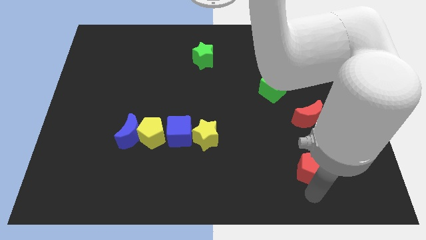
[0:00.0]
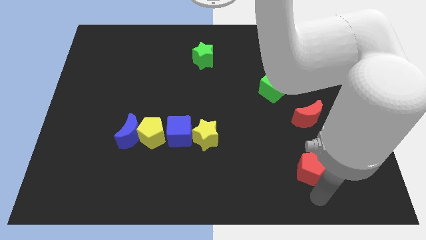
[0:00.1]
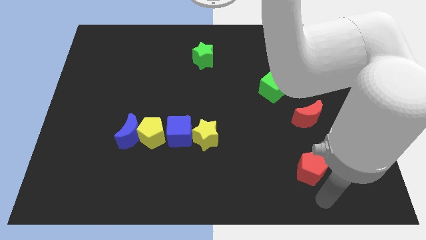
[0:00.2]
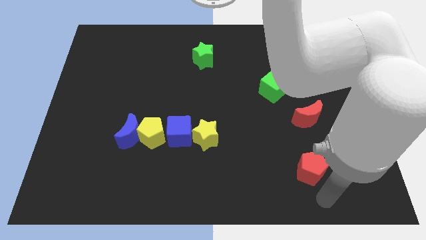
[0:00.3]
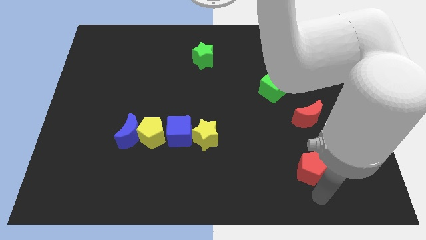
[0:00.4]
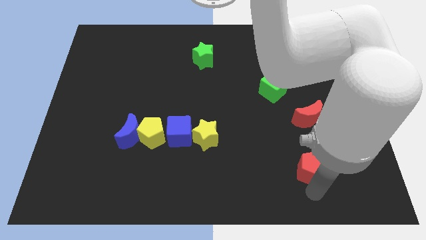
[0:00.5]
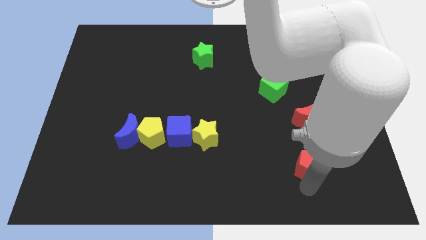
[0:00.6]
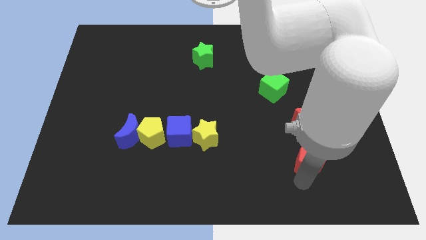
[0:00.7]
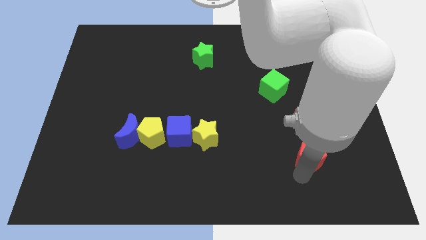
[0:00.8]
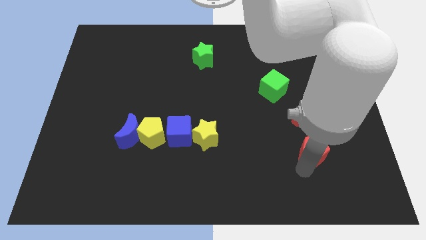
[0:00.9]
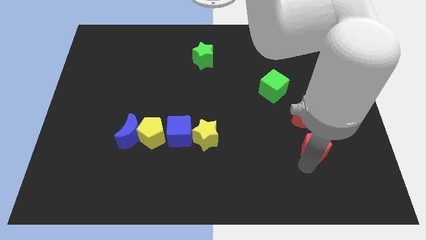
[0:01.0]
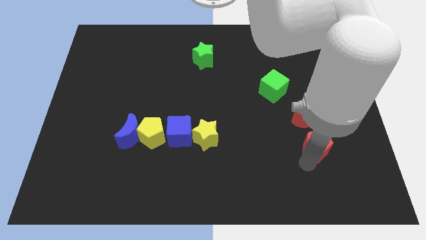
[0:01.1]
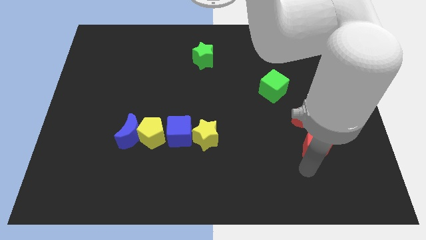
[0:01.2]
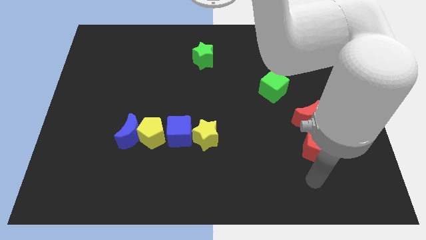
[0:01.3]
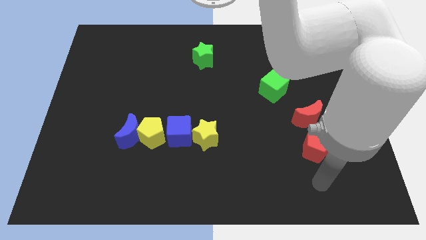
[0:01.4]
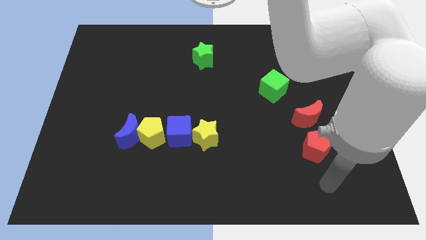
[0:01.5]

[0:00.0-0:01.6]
push the red pentagon vertically at the bottom of the red crescent

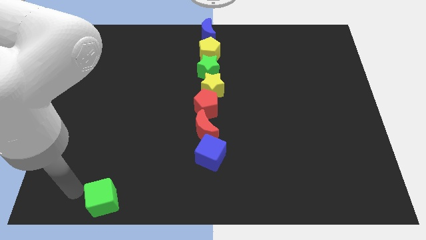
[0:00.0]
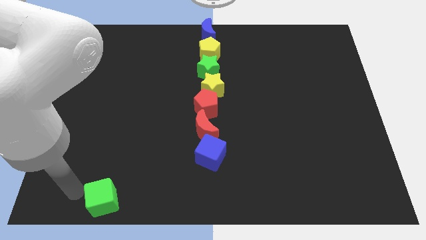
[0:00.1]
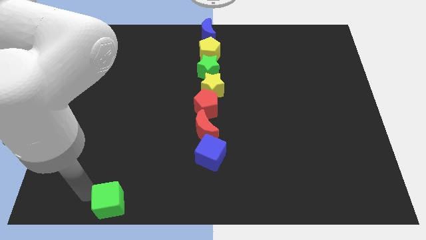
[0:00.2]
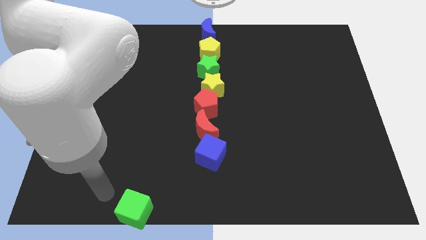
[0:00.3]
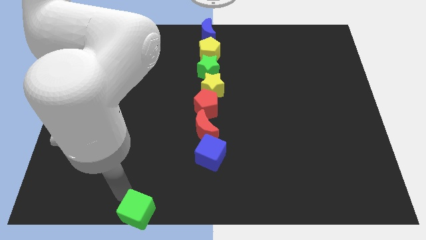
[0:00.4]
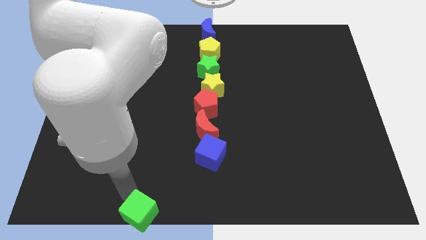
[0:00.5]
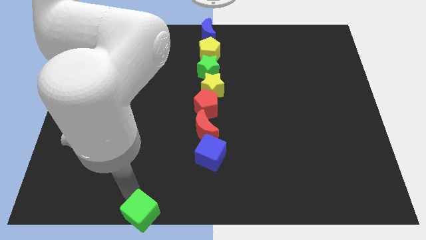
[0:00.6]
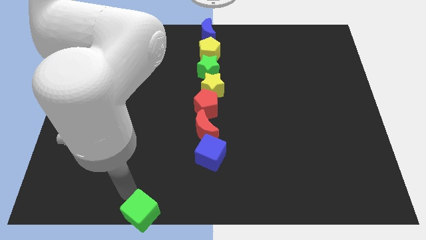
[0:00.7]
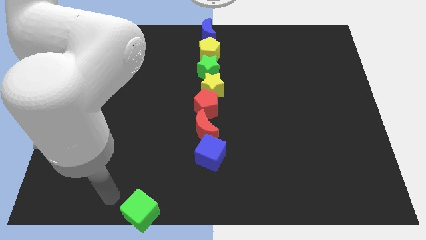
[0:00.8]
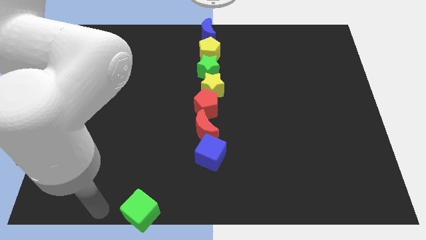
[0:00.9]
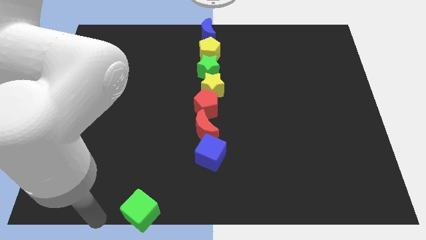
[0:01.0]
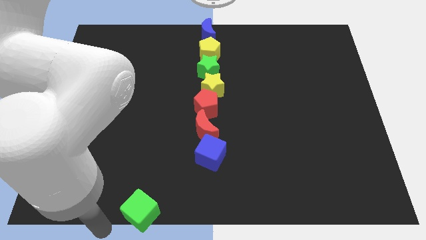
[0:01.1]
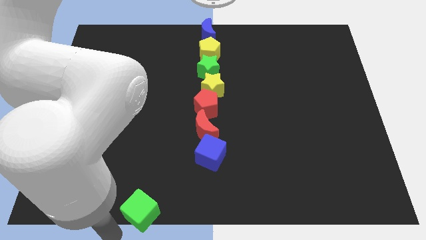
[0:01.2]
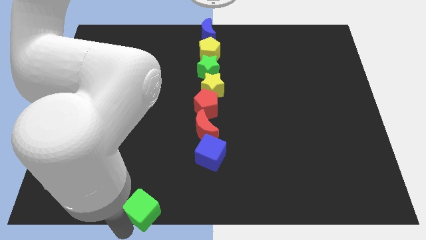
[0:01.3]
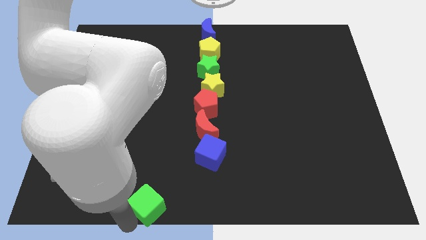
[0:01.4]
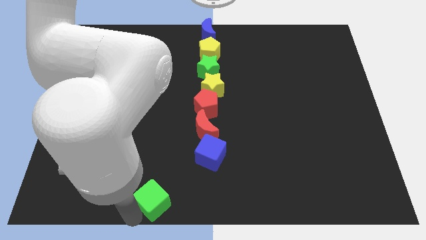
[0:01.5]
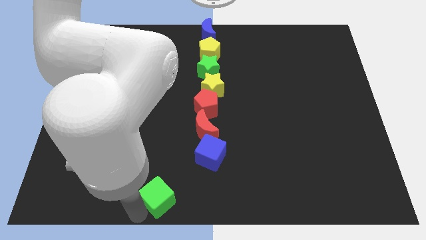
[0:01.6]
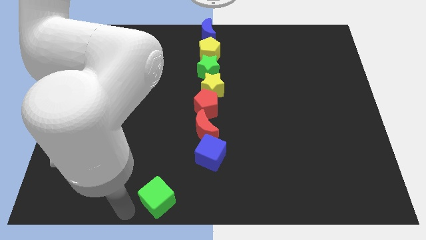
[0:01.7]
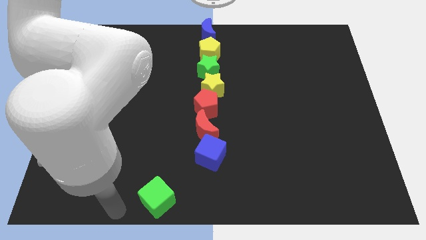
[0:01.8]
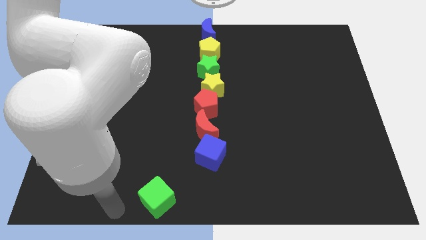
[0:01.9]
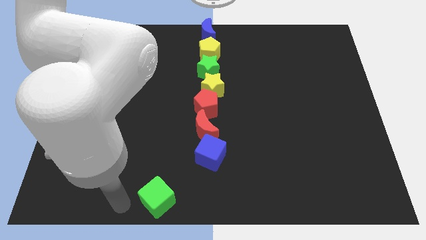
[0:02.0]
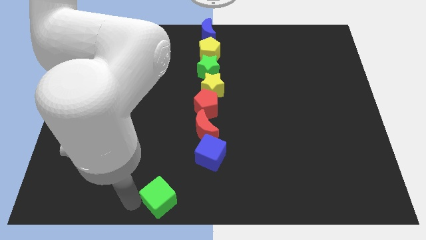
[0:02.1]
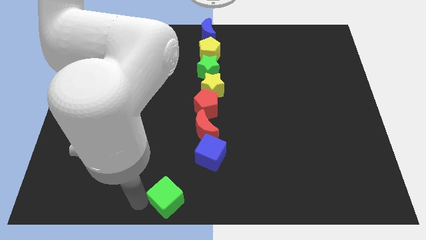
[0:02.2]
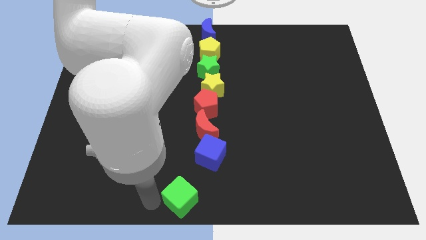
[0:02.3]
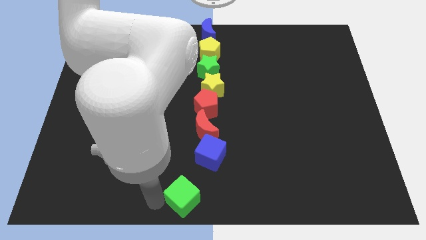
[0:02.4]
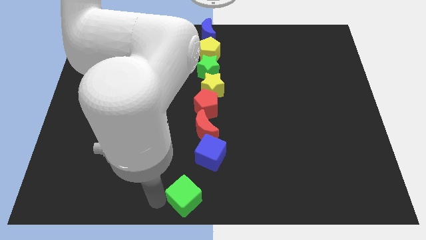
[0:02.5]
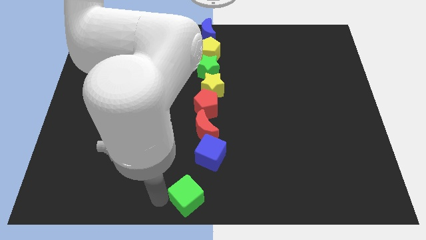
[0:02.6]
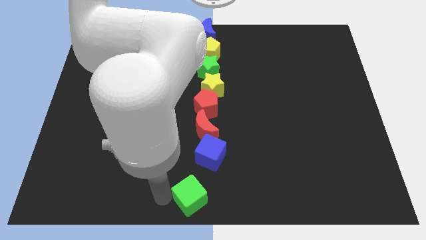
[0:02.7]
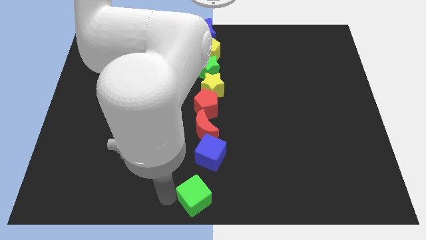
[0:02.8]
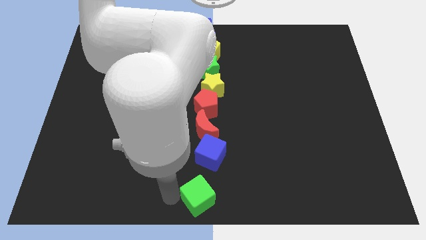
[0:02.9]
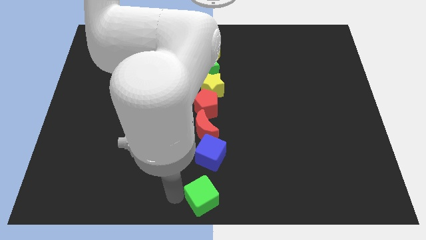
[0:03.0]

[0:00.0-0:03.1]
slide the green cube to the bottom center of the board

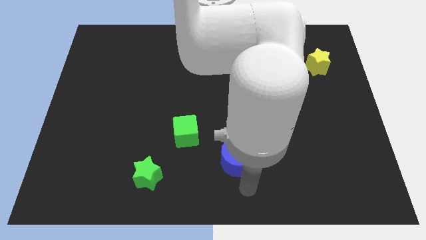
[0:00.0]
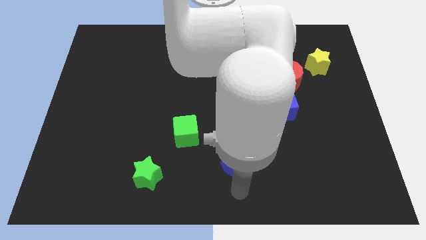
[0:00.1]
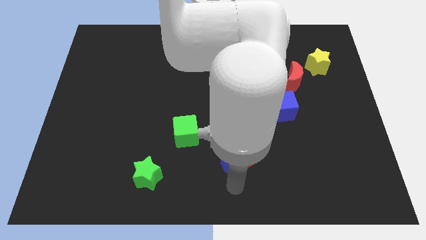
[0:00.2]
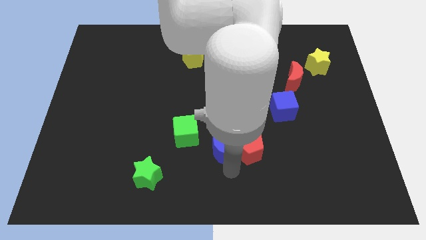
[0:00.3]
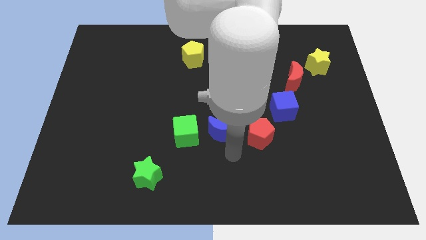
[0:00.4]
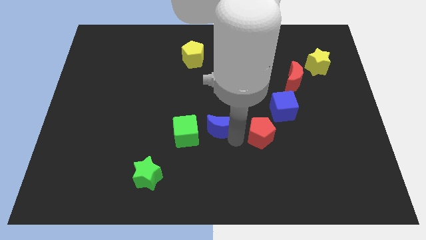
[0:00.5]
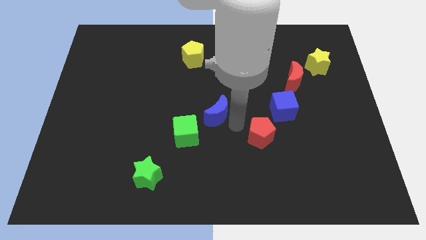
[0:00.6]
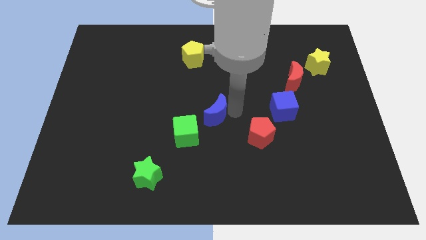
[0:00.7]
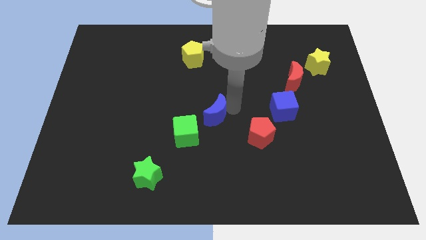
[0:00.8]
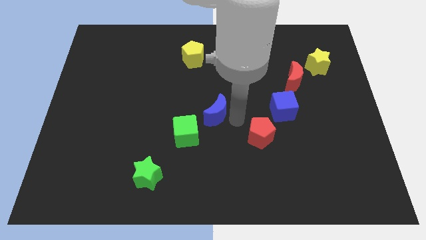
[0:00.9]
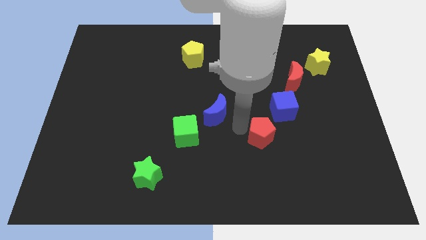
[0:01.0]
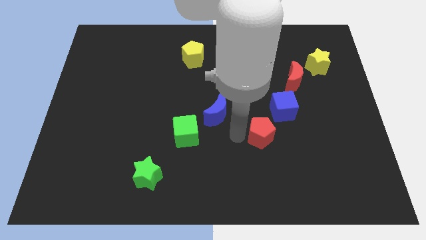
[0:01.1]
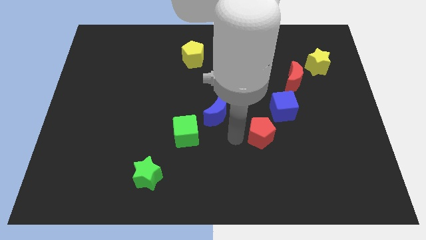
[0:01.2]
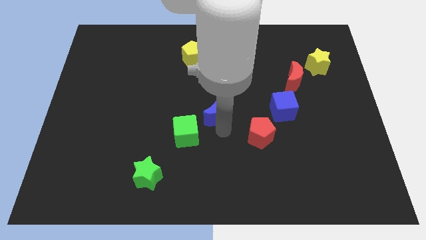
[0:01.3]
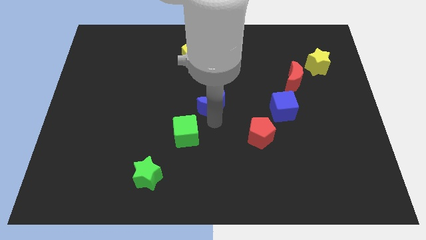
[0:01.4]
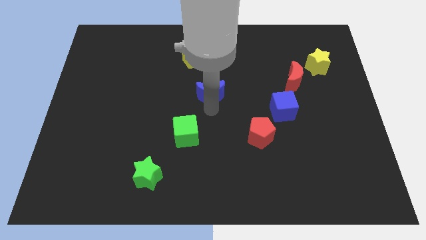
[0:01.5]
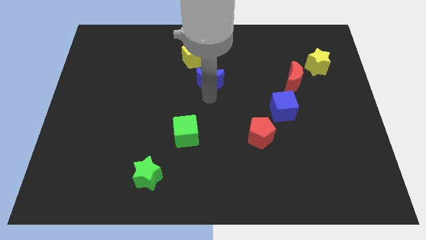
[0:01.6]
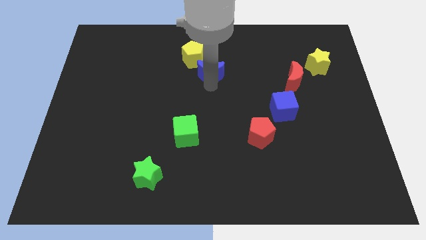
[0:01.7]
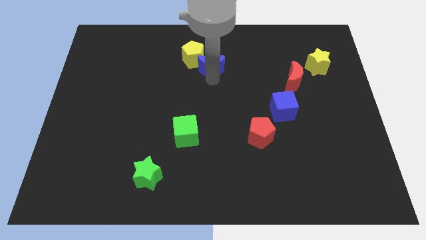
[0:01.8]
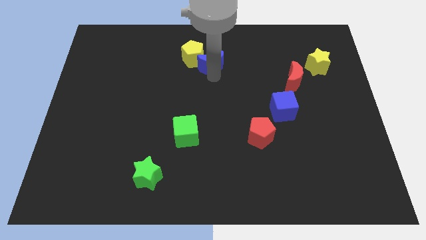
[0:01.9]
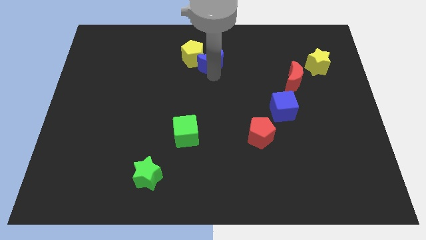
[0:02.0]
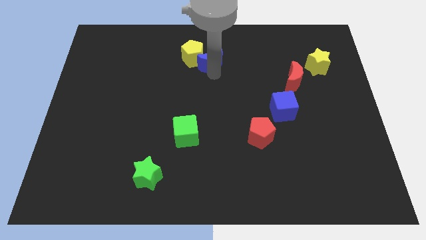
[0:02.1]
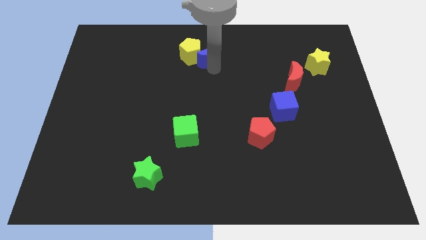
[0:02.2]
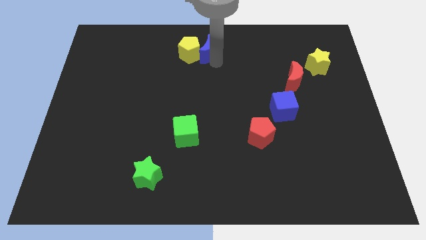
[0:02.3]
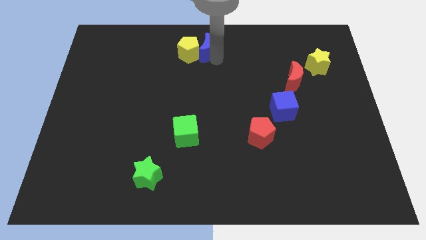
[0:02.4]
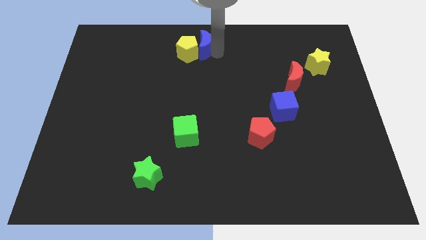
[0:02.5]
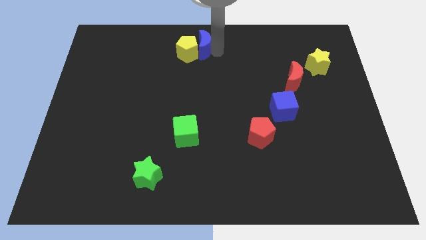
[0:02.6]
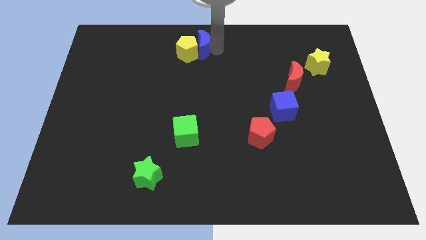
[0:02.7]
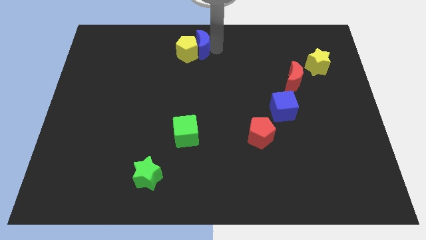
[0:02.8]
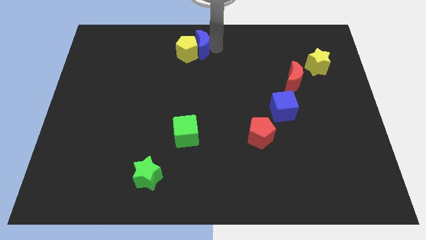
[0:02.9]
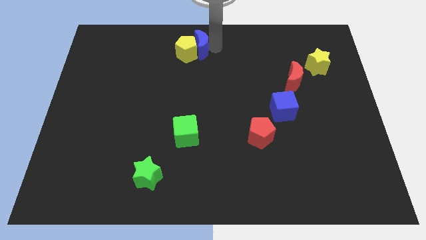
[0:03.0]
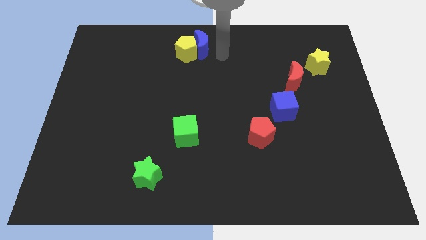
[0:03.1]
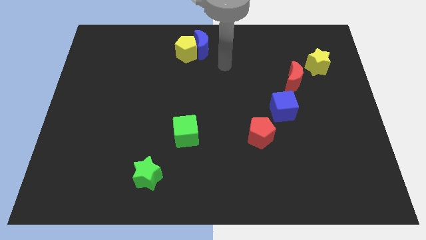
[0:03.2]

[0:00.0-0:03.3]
push the blue crescent into the yellow pentagon

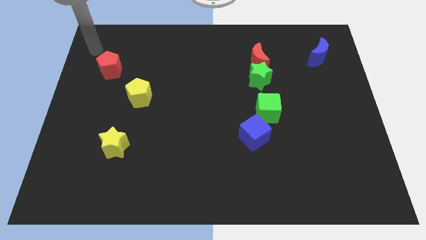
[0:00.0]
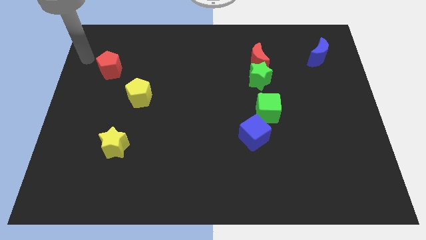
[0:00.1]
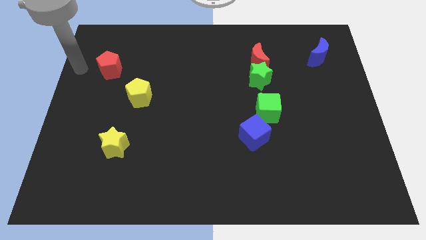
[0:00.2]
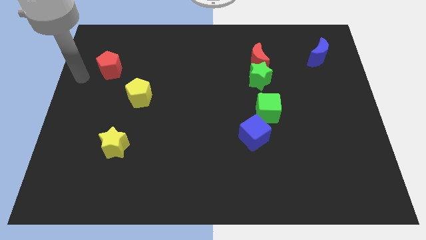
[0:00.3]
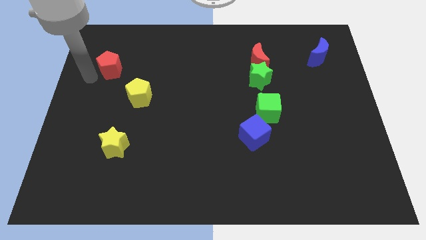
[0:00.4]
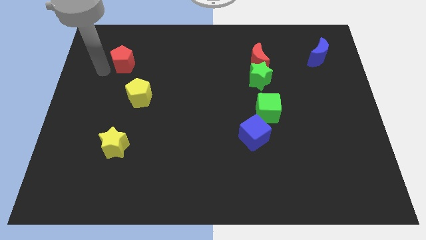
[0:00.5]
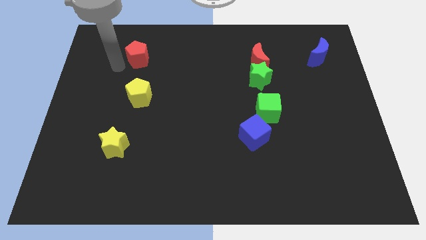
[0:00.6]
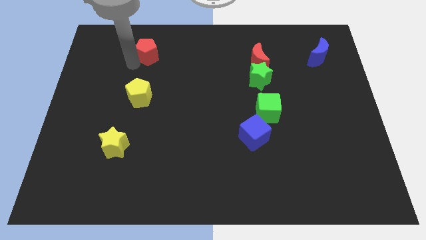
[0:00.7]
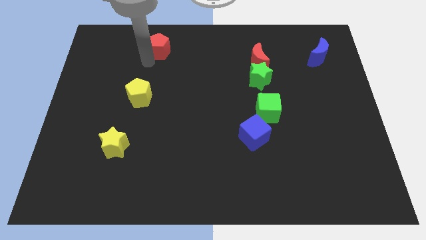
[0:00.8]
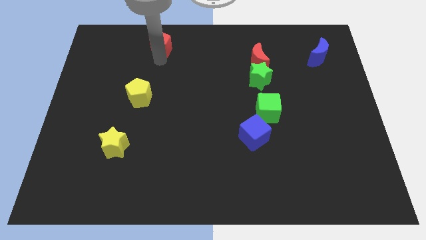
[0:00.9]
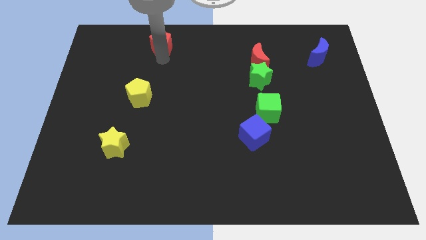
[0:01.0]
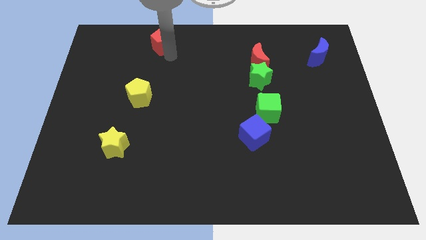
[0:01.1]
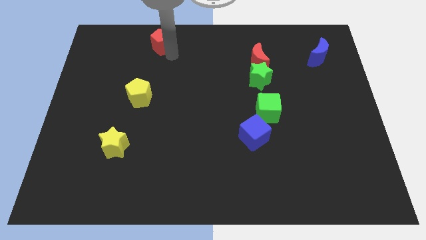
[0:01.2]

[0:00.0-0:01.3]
move the red pentagon to the top center
